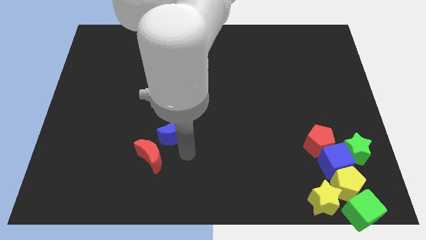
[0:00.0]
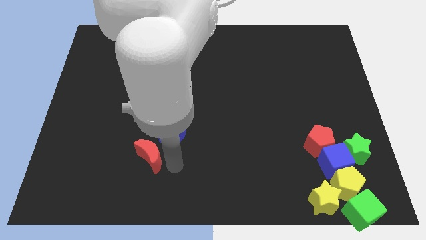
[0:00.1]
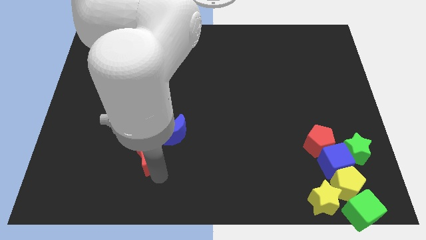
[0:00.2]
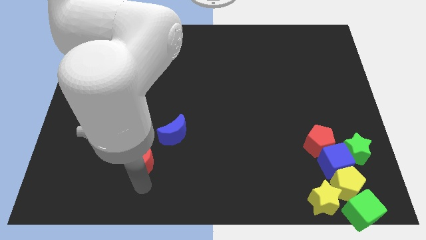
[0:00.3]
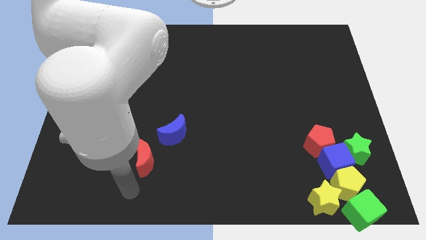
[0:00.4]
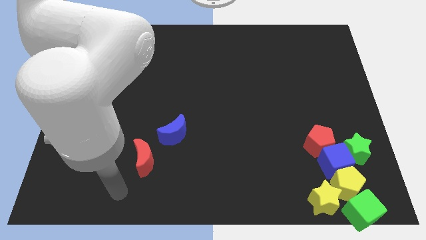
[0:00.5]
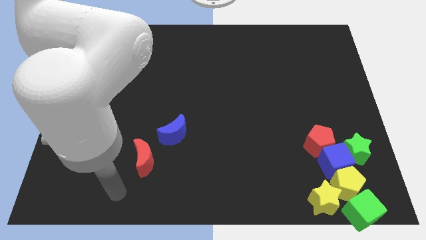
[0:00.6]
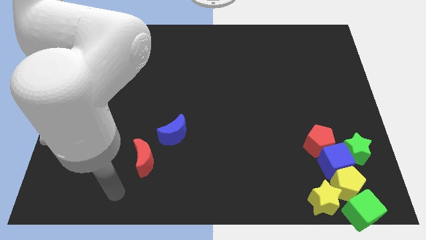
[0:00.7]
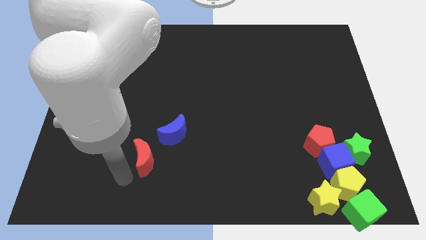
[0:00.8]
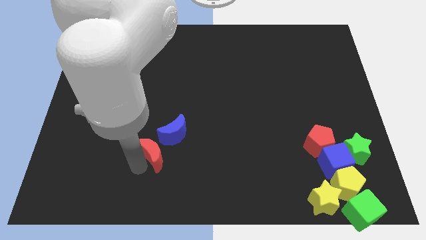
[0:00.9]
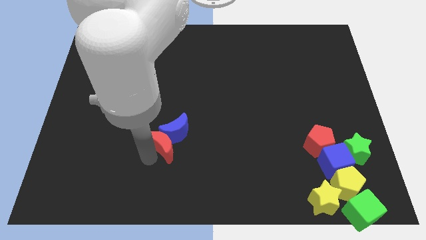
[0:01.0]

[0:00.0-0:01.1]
push the red crescent into the blue crescent

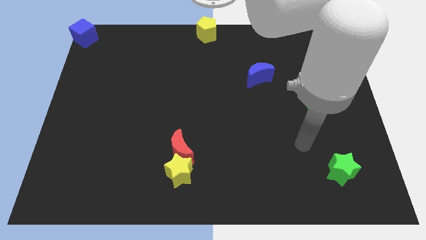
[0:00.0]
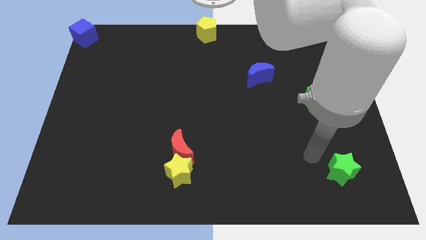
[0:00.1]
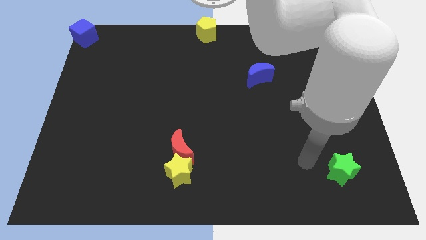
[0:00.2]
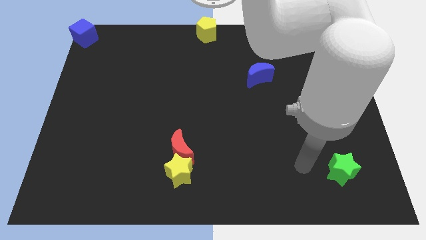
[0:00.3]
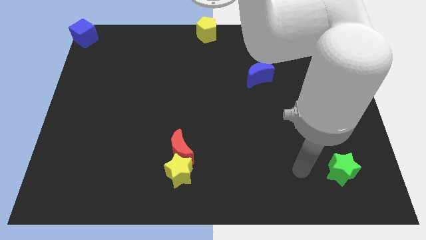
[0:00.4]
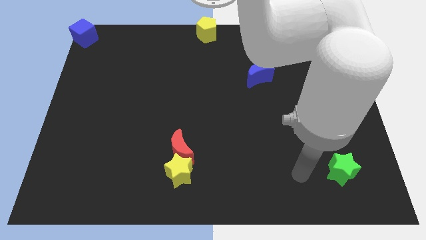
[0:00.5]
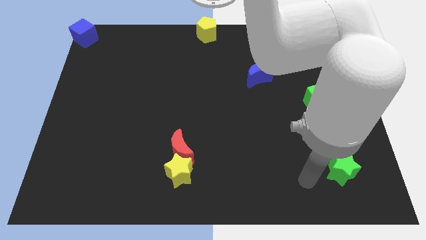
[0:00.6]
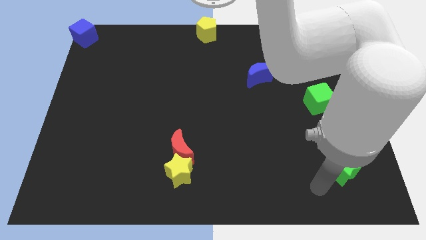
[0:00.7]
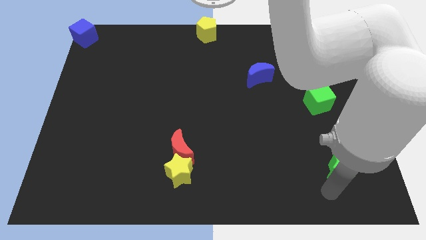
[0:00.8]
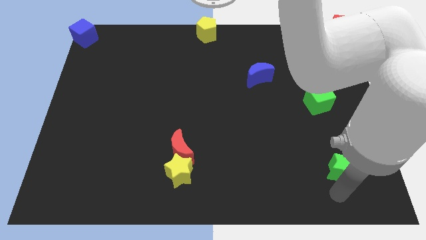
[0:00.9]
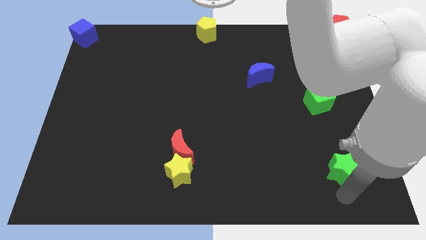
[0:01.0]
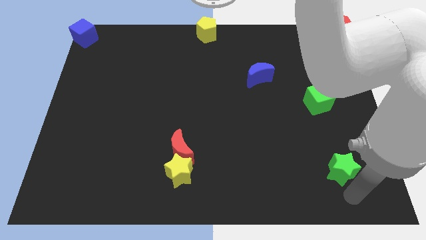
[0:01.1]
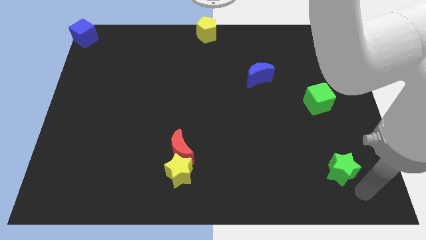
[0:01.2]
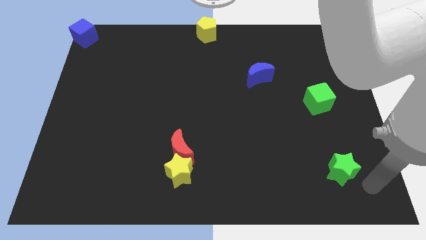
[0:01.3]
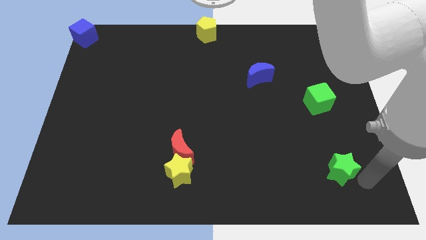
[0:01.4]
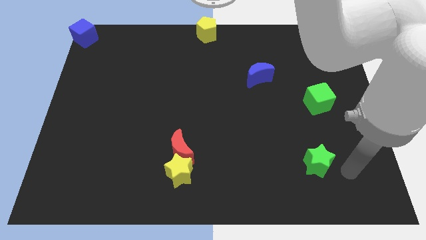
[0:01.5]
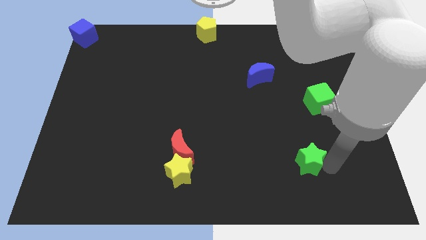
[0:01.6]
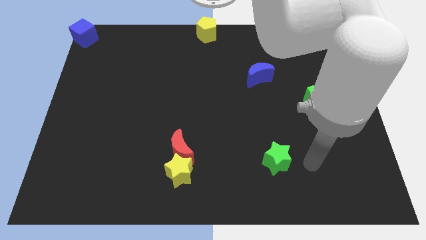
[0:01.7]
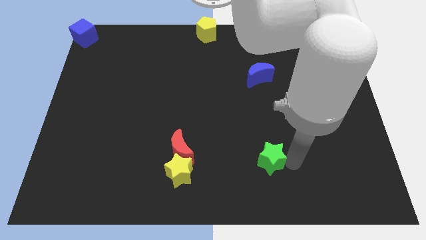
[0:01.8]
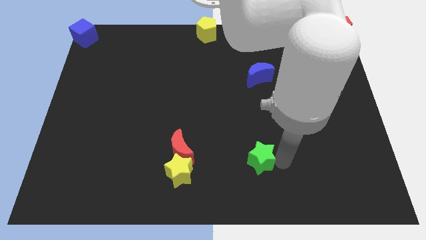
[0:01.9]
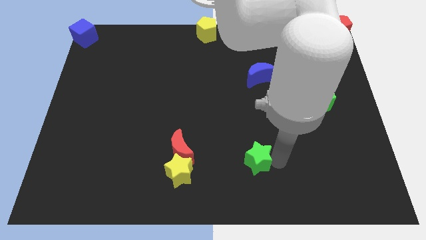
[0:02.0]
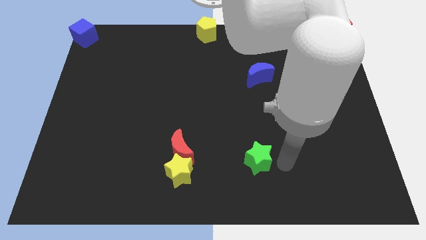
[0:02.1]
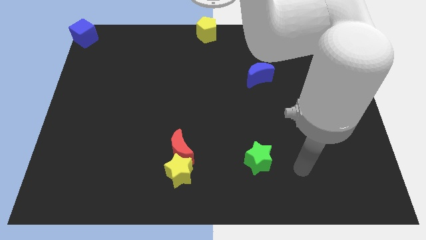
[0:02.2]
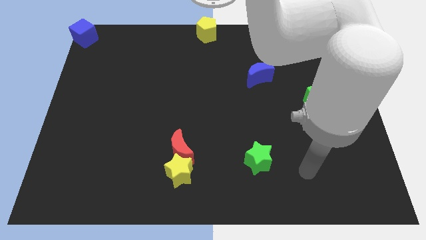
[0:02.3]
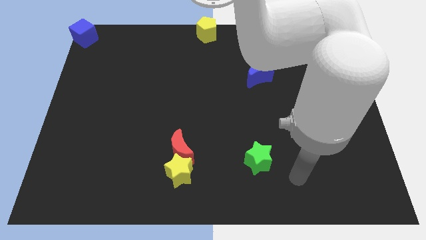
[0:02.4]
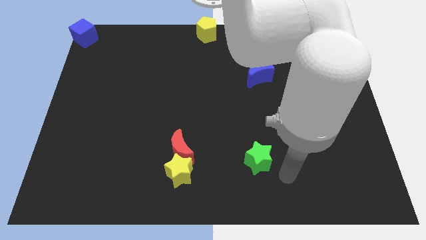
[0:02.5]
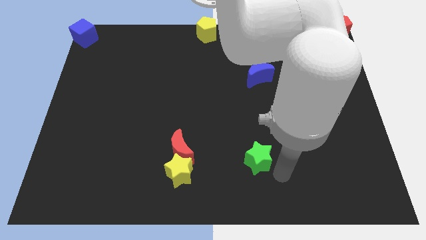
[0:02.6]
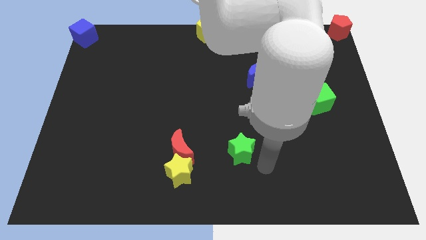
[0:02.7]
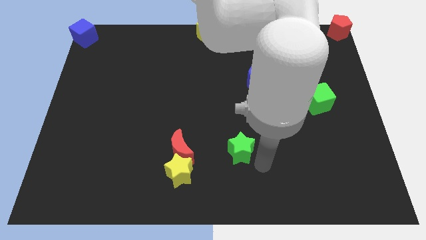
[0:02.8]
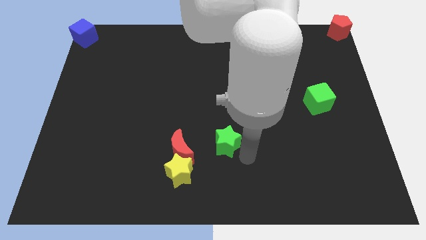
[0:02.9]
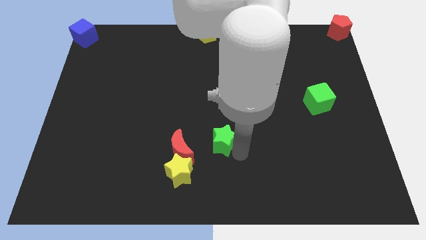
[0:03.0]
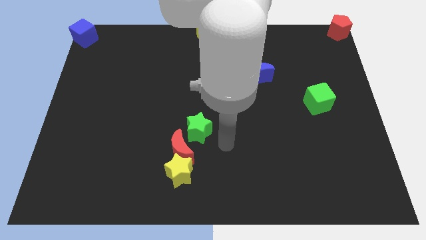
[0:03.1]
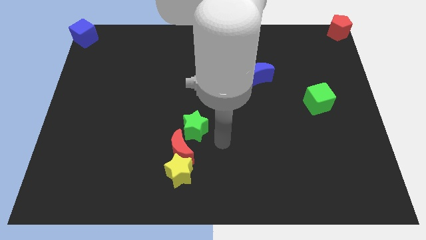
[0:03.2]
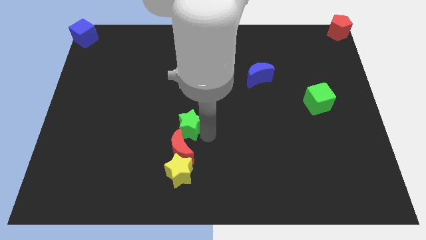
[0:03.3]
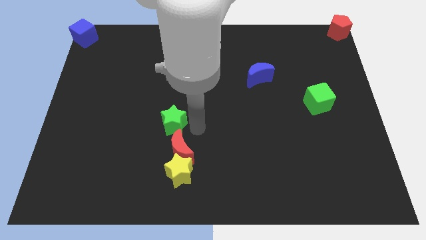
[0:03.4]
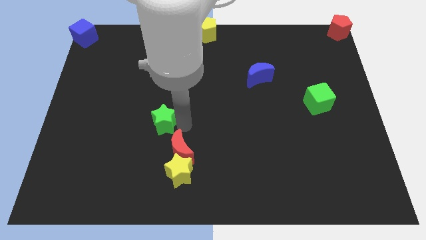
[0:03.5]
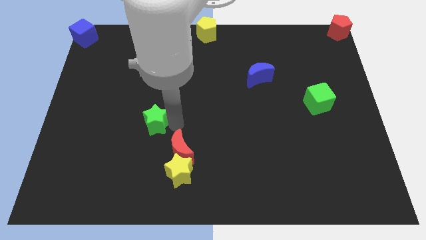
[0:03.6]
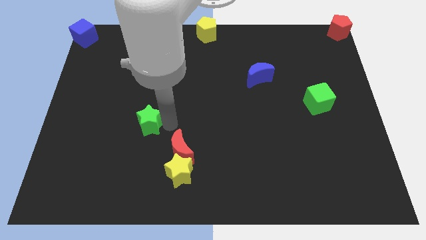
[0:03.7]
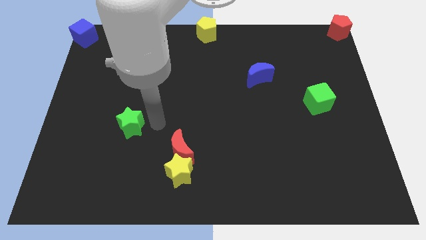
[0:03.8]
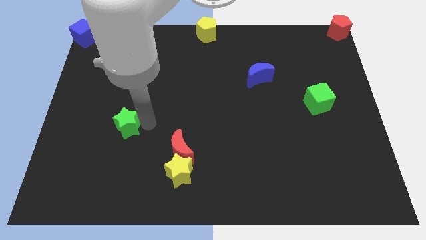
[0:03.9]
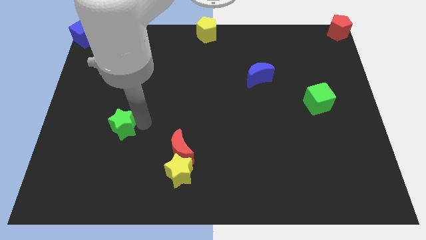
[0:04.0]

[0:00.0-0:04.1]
push green star towards center left

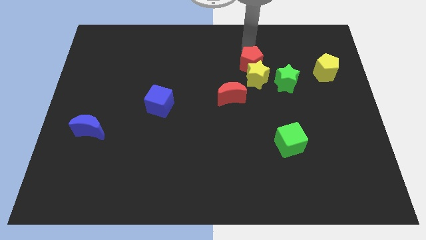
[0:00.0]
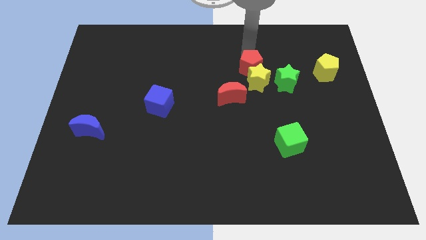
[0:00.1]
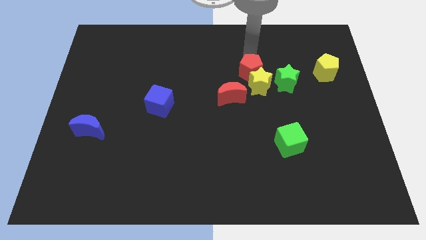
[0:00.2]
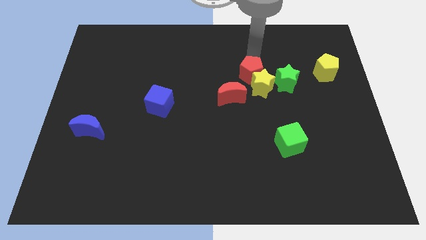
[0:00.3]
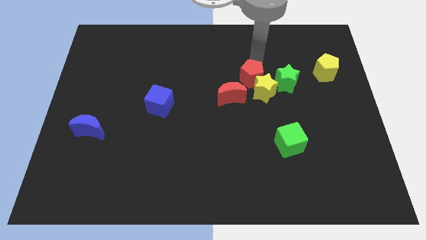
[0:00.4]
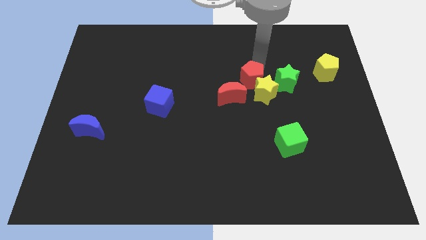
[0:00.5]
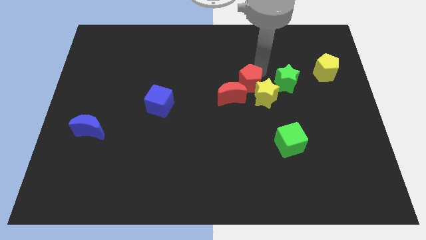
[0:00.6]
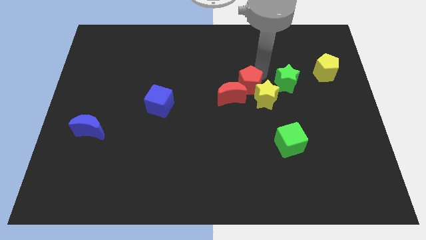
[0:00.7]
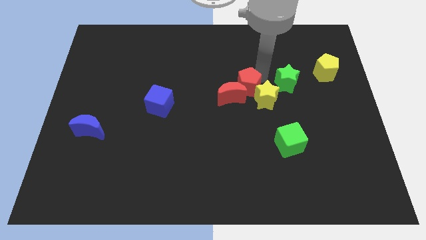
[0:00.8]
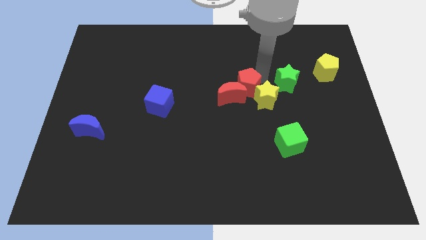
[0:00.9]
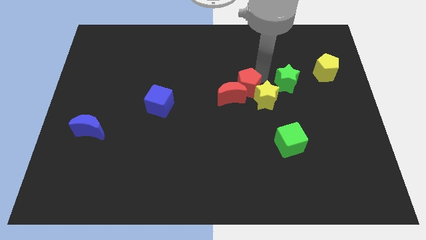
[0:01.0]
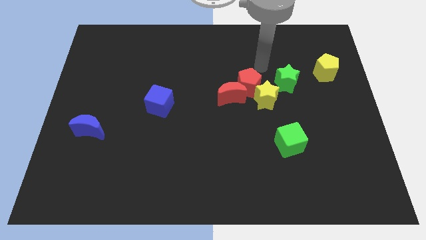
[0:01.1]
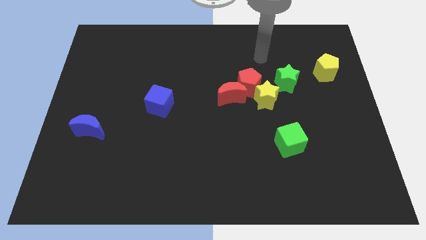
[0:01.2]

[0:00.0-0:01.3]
move the red pentagon close to the red crescent

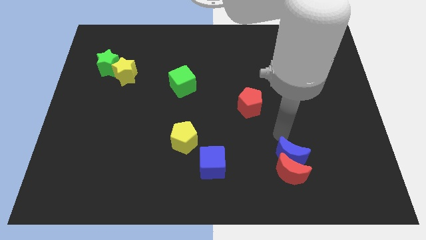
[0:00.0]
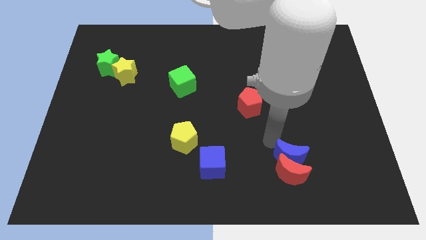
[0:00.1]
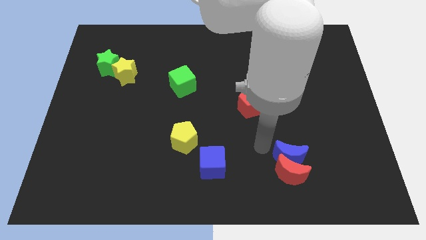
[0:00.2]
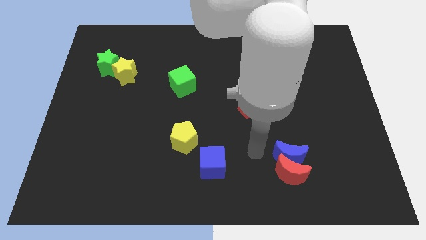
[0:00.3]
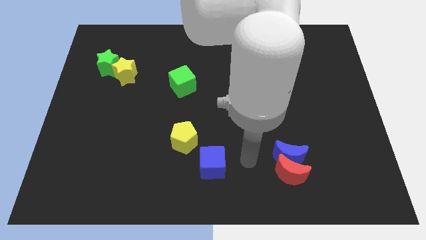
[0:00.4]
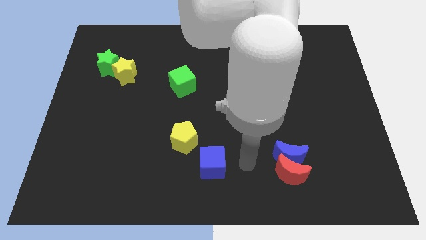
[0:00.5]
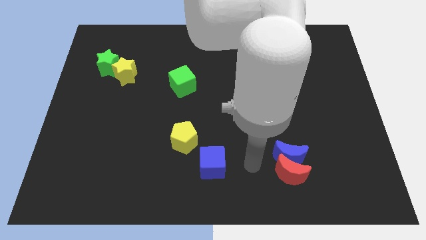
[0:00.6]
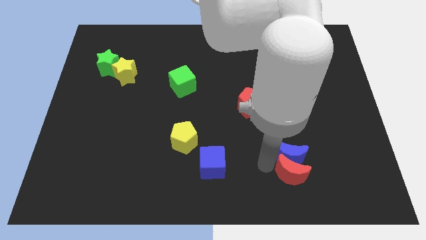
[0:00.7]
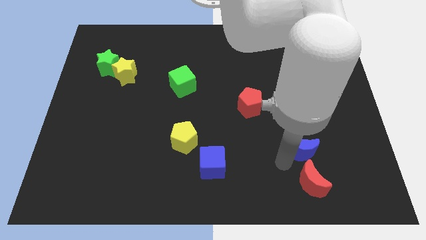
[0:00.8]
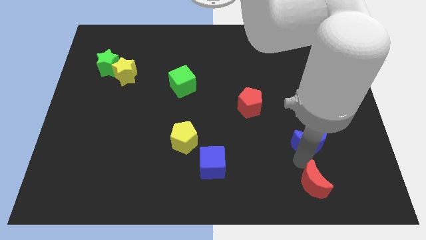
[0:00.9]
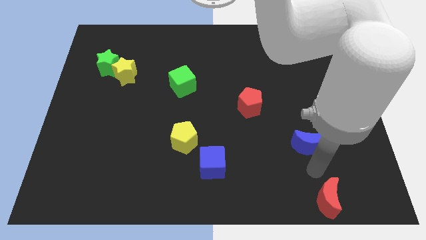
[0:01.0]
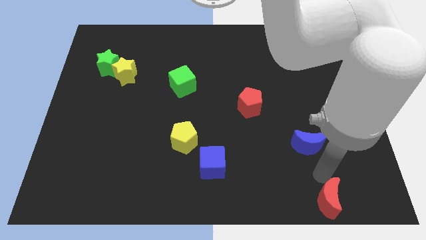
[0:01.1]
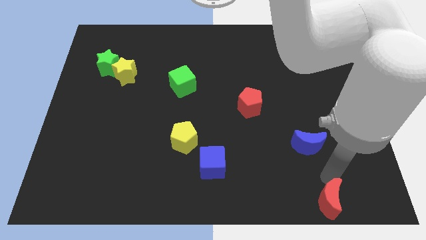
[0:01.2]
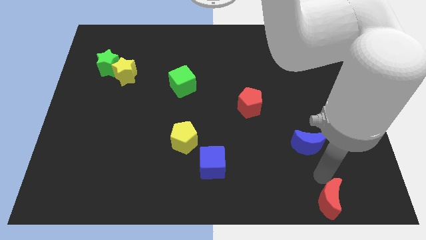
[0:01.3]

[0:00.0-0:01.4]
separate red moon and blue moon

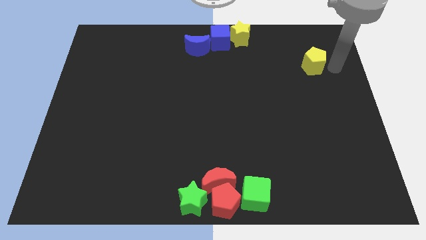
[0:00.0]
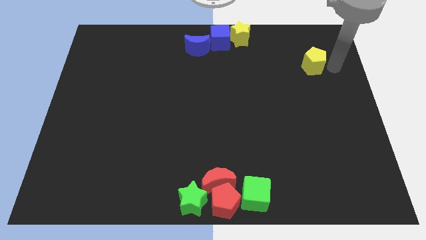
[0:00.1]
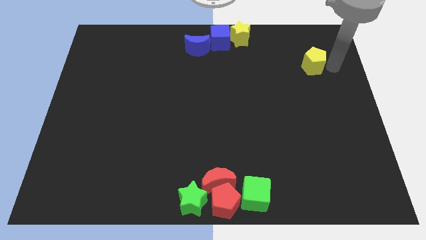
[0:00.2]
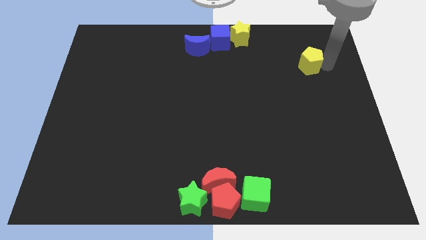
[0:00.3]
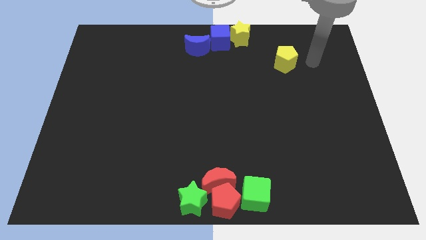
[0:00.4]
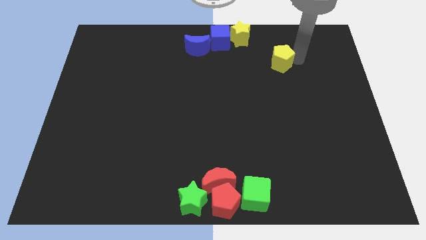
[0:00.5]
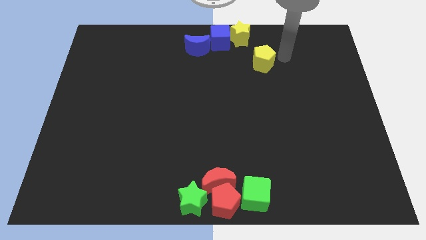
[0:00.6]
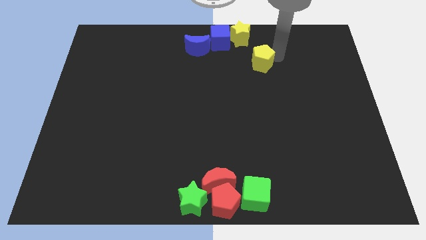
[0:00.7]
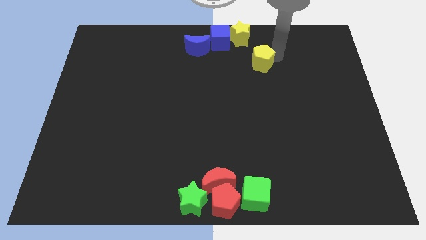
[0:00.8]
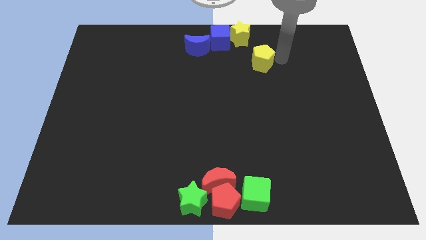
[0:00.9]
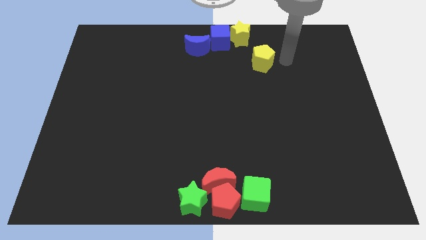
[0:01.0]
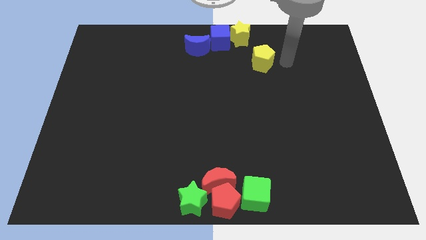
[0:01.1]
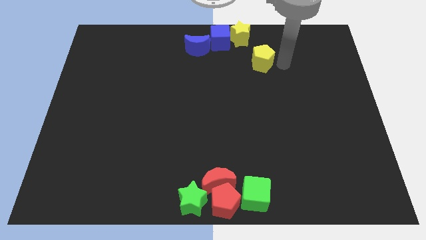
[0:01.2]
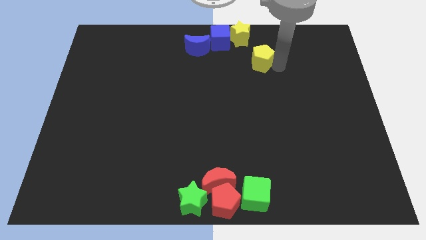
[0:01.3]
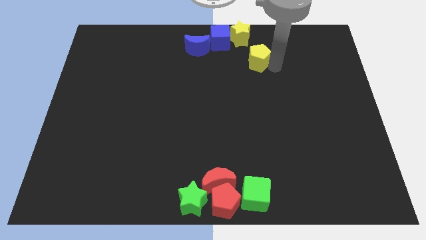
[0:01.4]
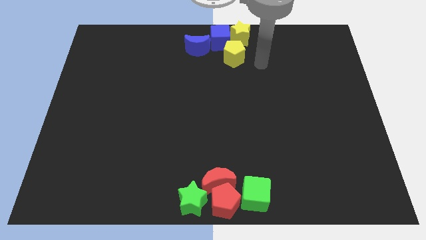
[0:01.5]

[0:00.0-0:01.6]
put the yellow pentagon at the bottom right side of the yellow star
